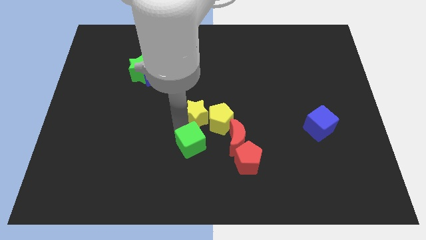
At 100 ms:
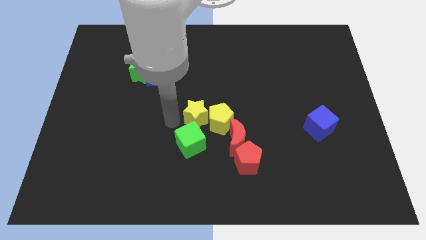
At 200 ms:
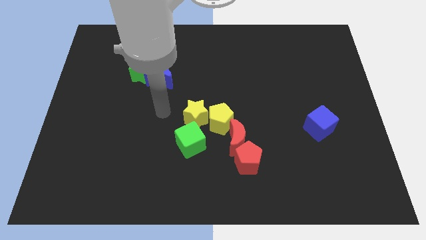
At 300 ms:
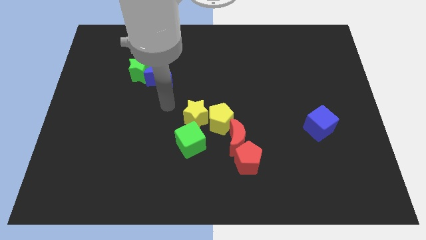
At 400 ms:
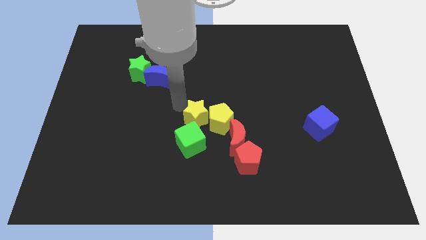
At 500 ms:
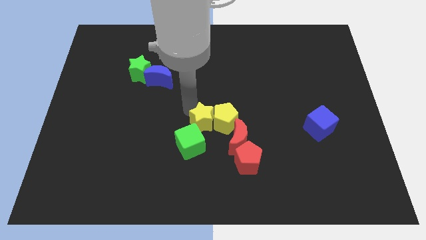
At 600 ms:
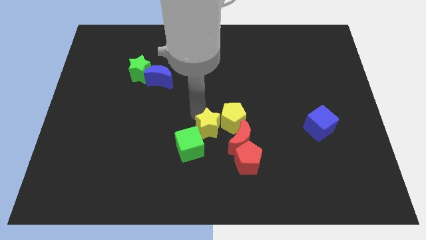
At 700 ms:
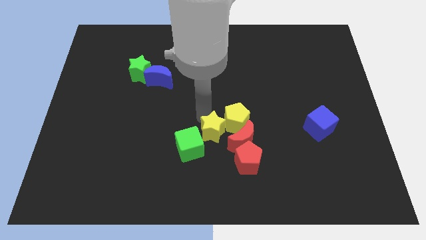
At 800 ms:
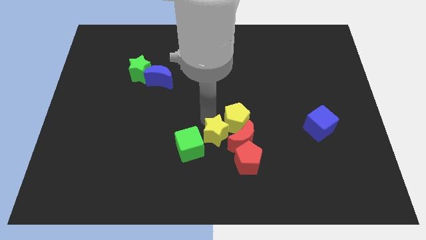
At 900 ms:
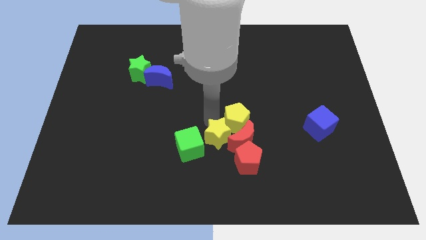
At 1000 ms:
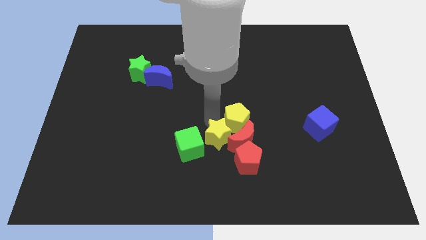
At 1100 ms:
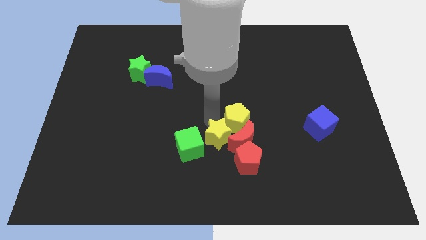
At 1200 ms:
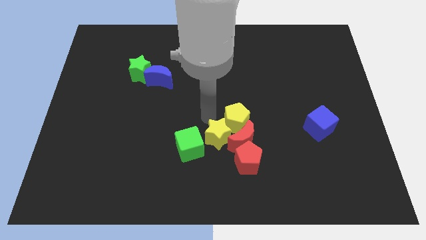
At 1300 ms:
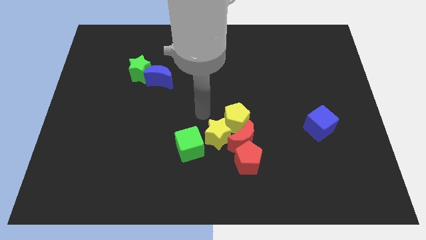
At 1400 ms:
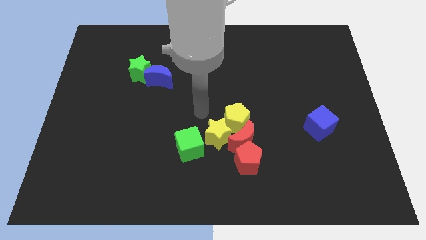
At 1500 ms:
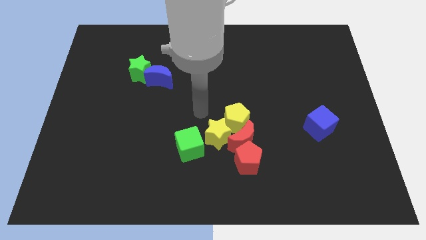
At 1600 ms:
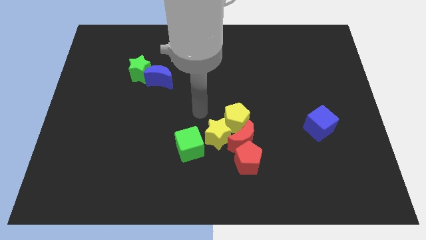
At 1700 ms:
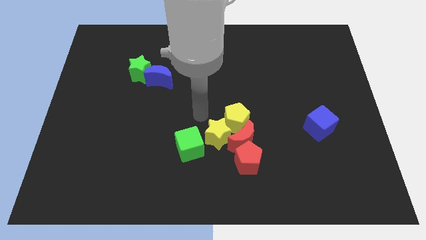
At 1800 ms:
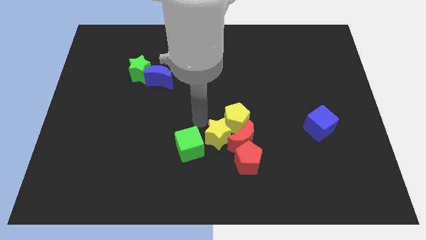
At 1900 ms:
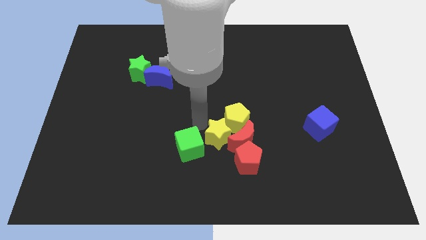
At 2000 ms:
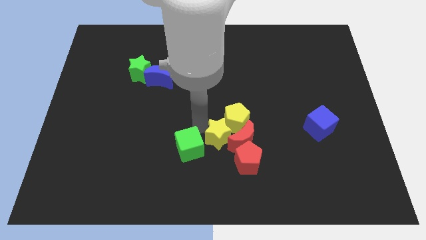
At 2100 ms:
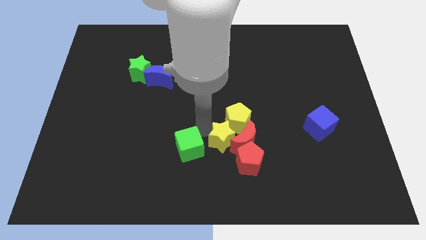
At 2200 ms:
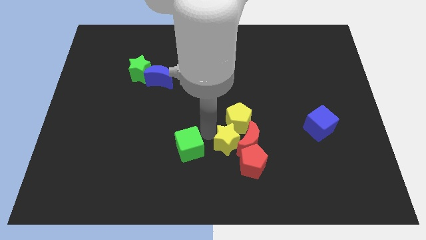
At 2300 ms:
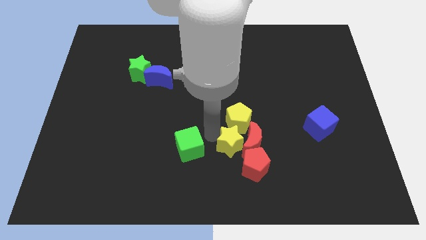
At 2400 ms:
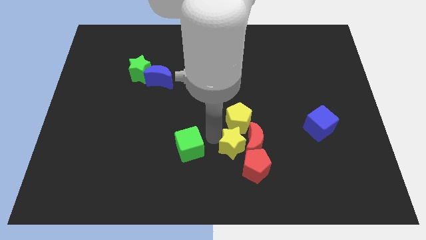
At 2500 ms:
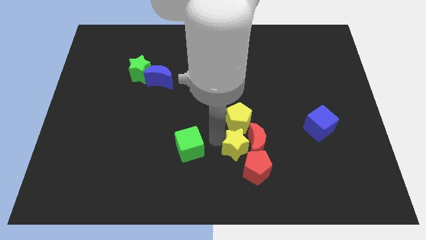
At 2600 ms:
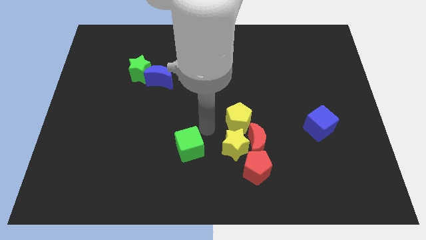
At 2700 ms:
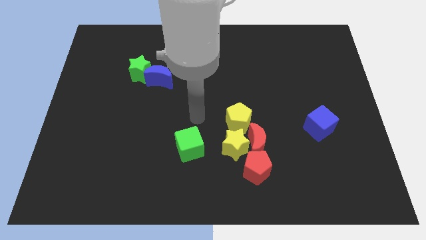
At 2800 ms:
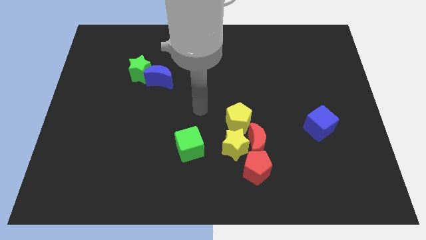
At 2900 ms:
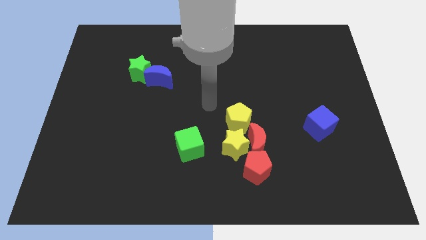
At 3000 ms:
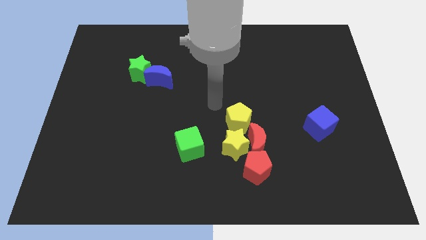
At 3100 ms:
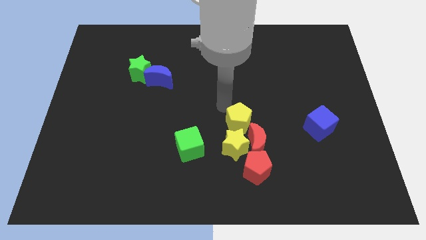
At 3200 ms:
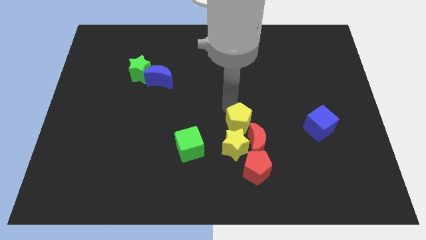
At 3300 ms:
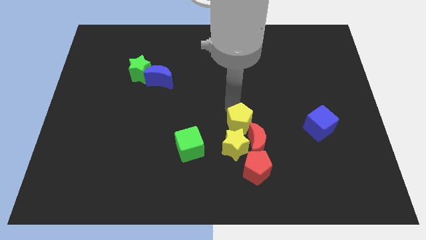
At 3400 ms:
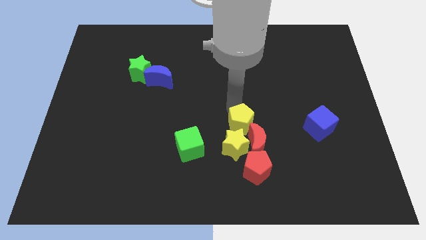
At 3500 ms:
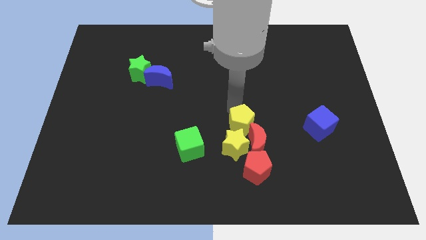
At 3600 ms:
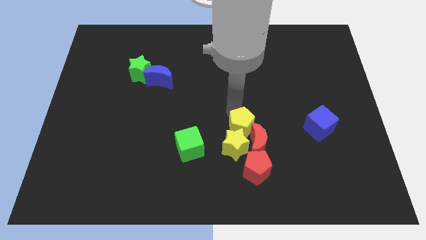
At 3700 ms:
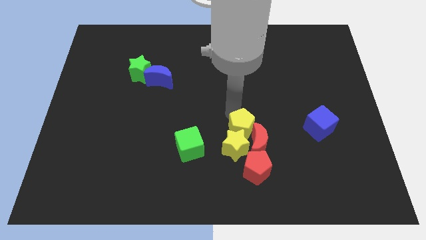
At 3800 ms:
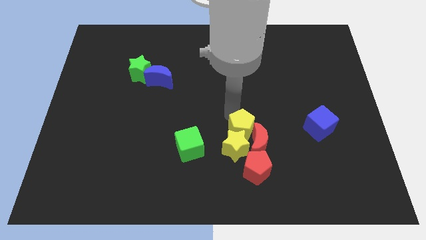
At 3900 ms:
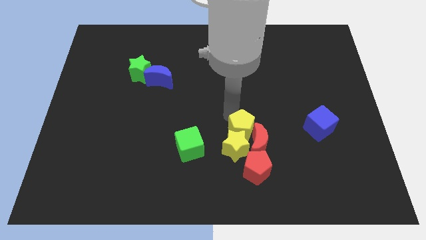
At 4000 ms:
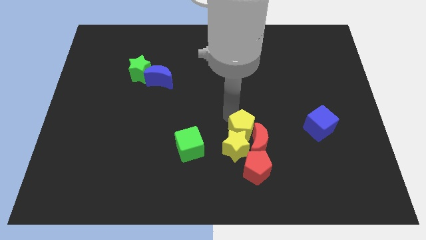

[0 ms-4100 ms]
push the yellow star below to the yellow pentagon

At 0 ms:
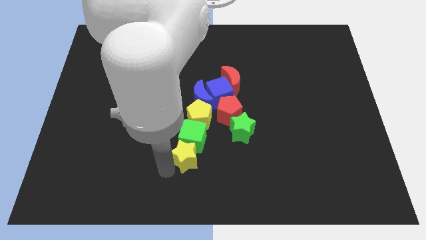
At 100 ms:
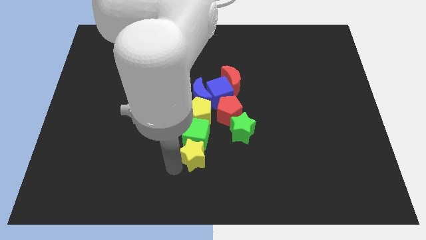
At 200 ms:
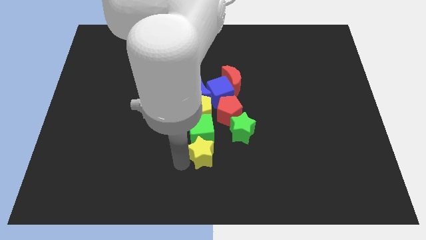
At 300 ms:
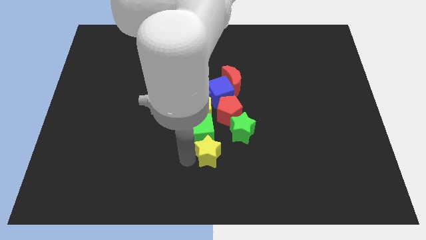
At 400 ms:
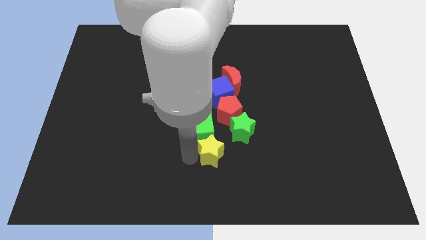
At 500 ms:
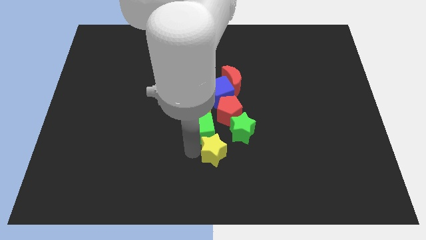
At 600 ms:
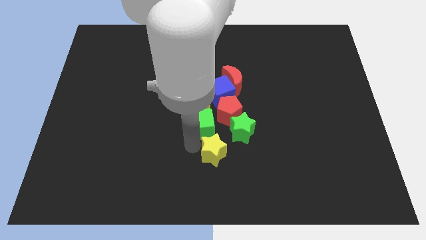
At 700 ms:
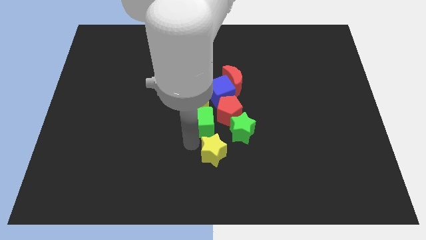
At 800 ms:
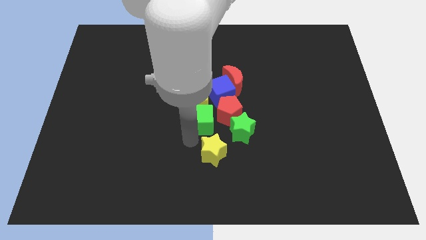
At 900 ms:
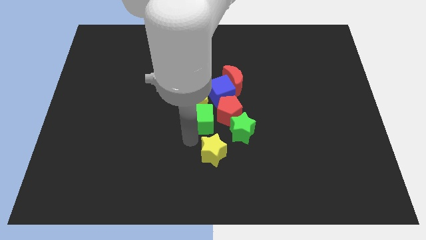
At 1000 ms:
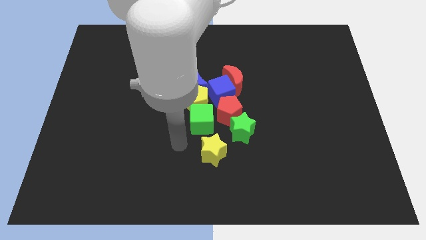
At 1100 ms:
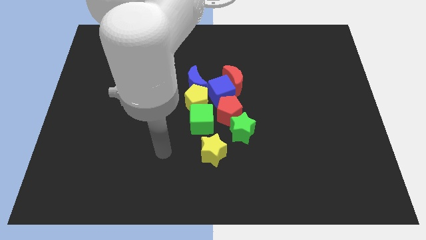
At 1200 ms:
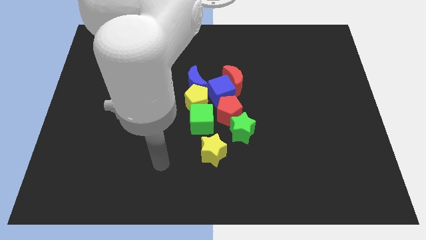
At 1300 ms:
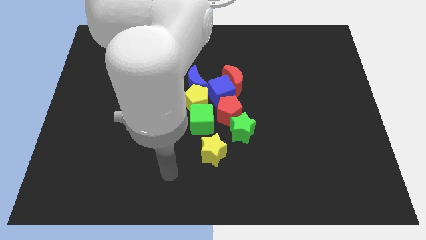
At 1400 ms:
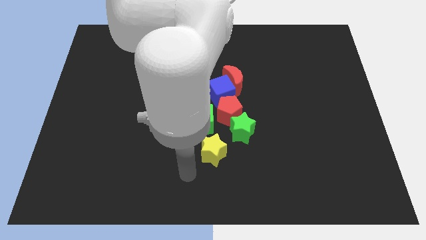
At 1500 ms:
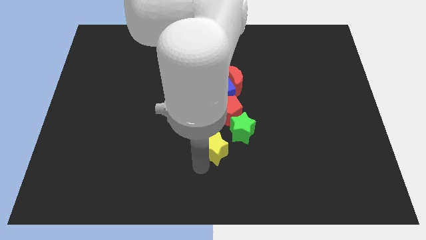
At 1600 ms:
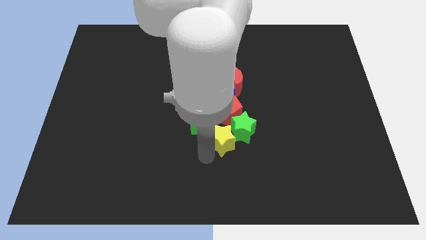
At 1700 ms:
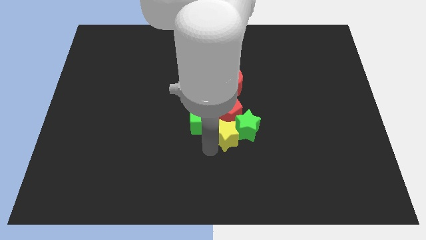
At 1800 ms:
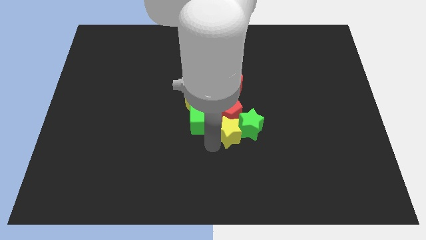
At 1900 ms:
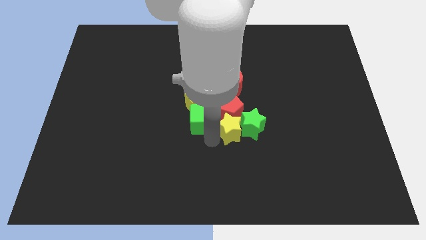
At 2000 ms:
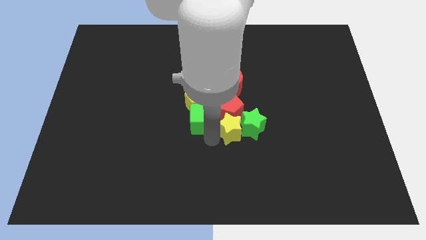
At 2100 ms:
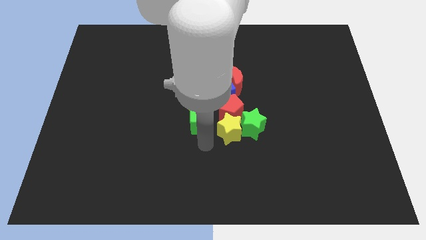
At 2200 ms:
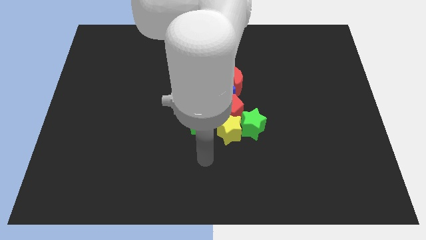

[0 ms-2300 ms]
move the yellow star into the green star

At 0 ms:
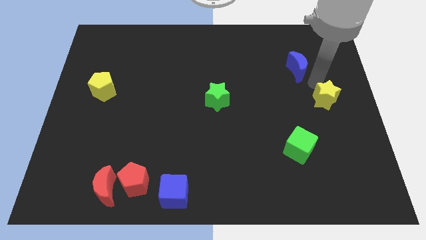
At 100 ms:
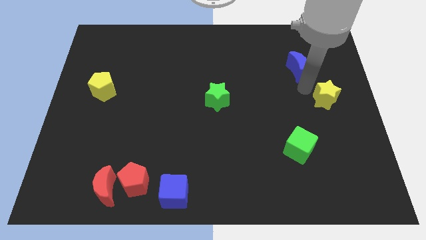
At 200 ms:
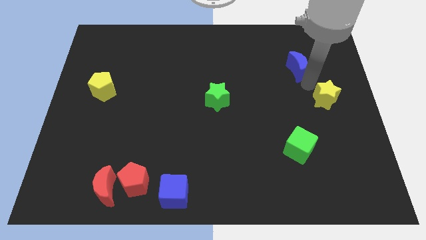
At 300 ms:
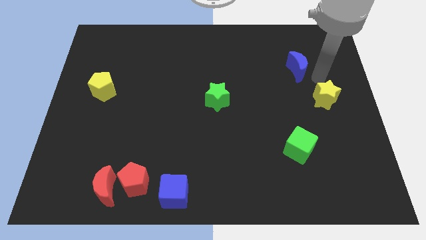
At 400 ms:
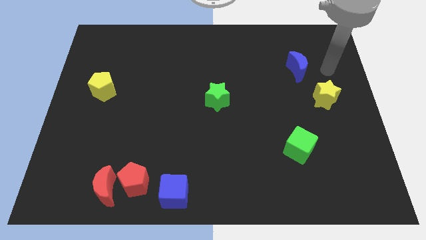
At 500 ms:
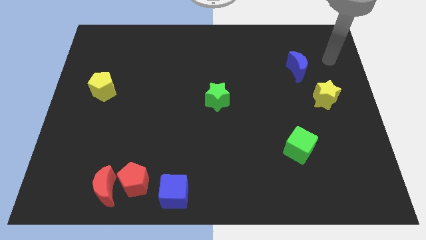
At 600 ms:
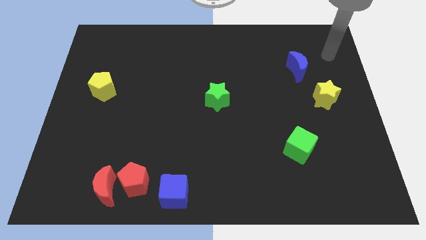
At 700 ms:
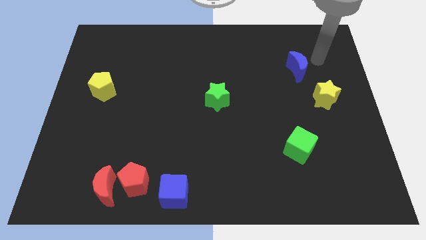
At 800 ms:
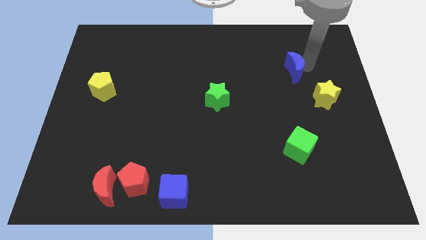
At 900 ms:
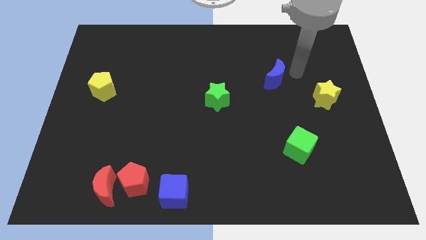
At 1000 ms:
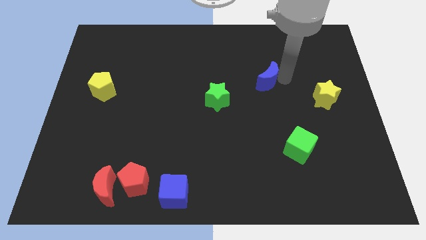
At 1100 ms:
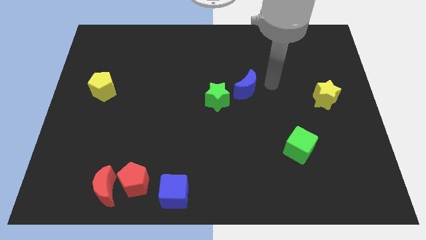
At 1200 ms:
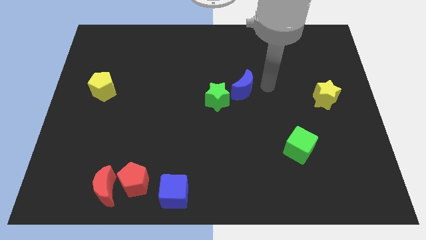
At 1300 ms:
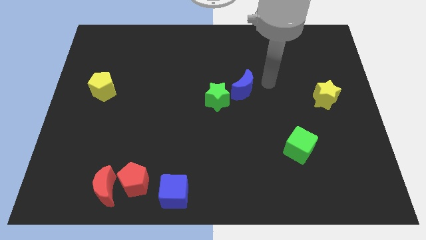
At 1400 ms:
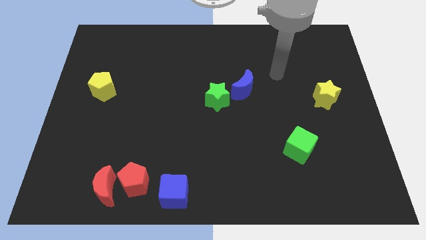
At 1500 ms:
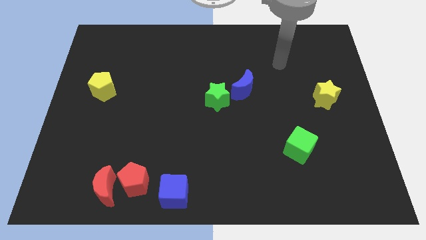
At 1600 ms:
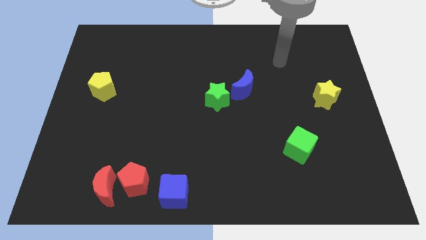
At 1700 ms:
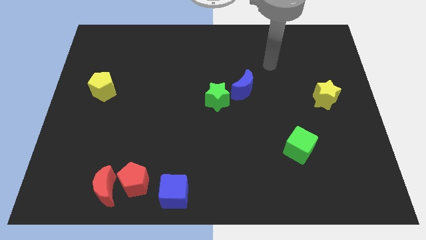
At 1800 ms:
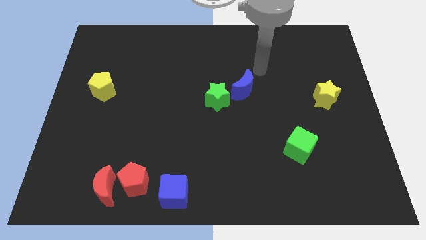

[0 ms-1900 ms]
move the blue crescent to the right of the green star

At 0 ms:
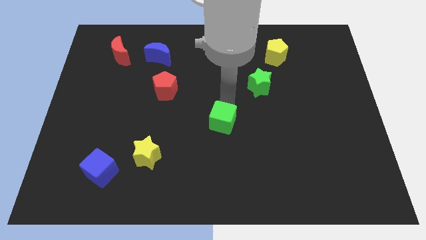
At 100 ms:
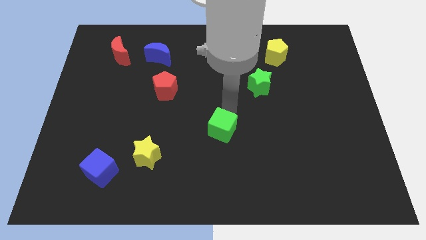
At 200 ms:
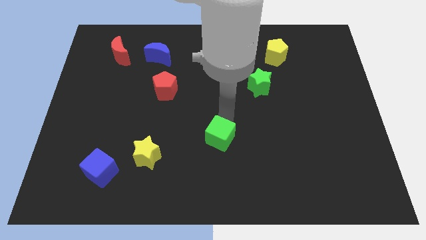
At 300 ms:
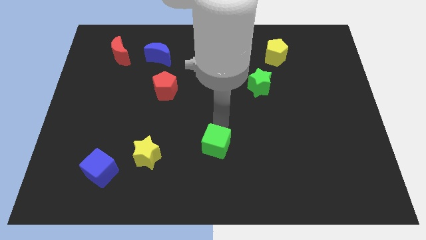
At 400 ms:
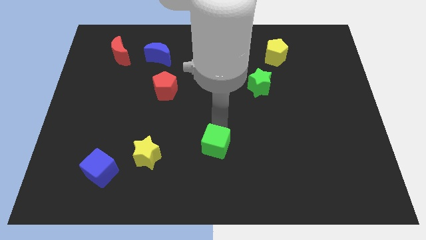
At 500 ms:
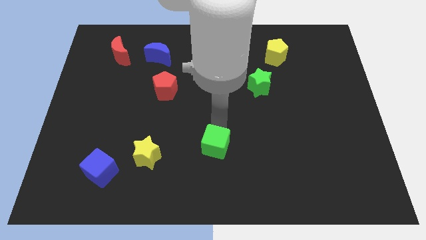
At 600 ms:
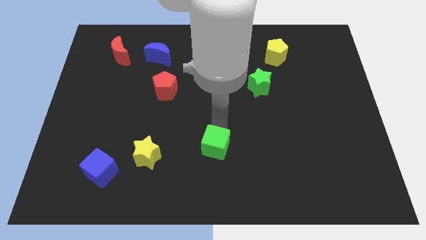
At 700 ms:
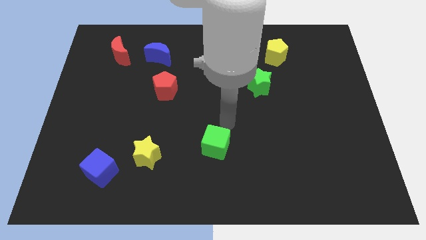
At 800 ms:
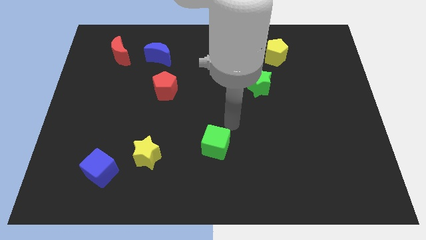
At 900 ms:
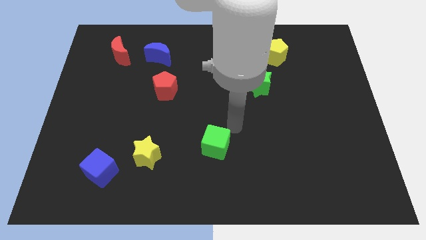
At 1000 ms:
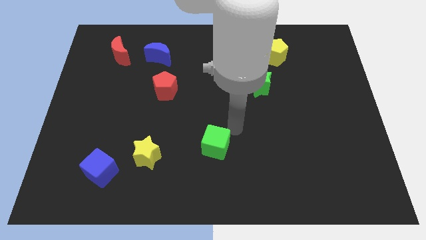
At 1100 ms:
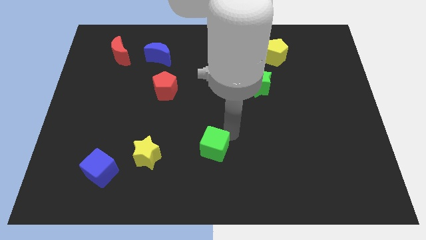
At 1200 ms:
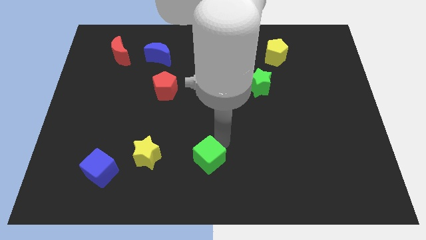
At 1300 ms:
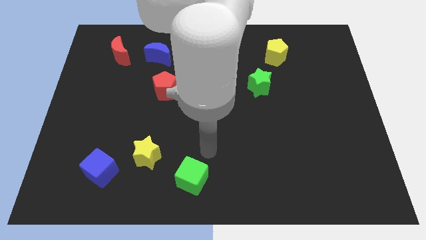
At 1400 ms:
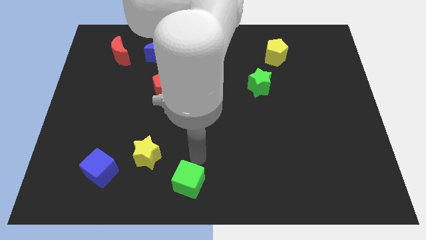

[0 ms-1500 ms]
drag the green cube slightly down
